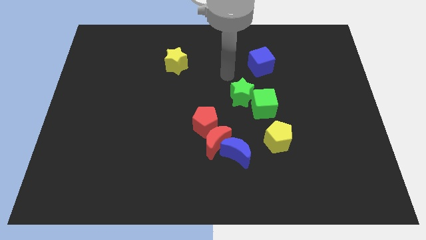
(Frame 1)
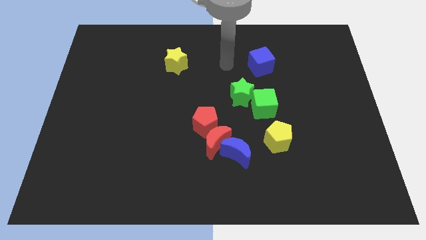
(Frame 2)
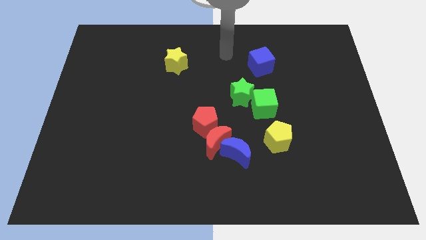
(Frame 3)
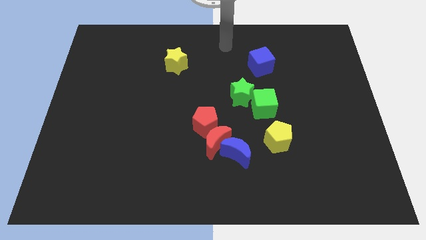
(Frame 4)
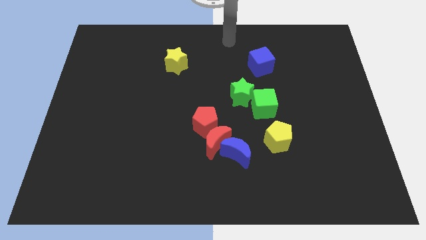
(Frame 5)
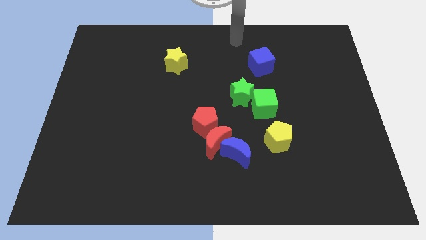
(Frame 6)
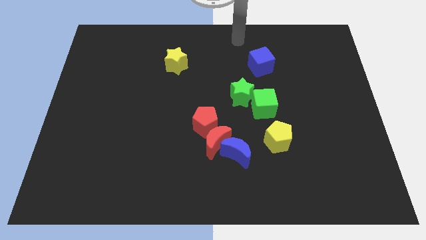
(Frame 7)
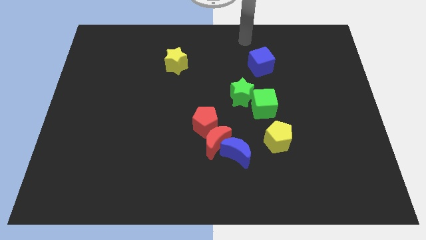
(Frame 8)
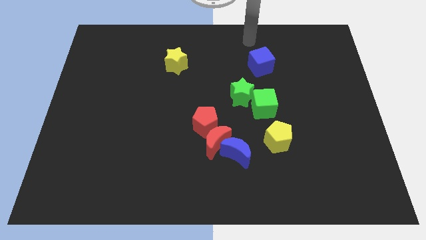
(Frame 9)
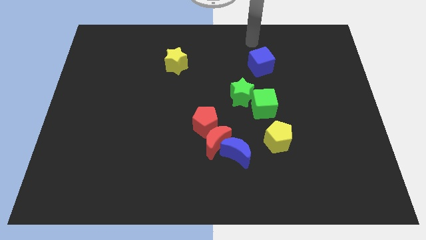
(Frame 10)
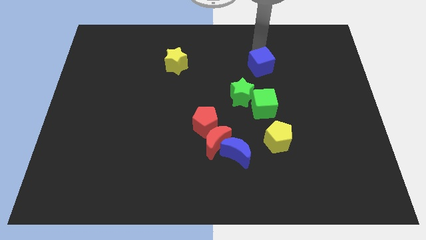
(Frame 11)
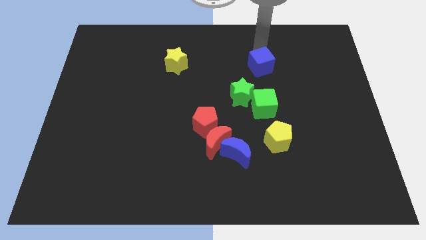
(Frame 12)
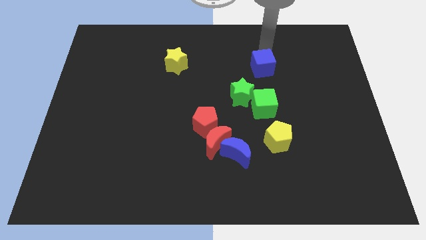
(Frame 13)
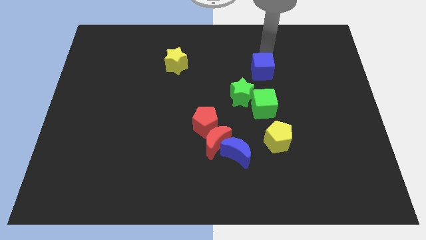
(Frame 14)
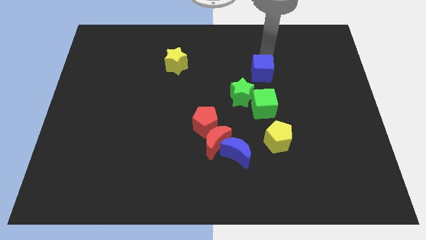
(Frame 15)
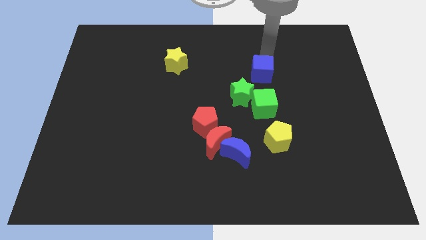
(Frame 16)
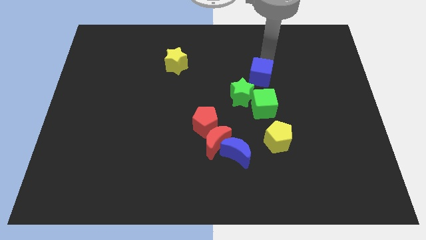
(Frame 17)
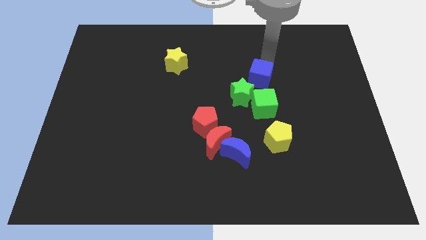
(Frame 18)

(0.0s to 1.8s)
move the blue cube towards the green star

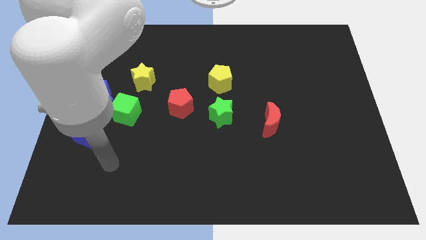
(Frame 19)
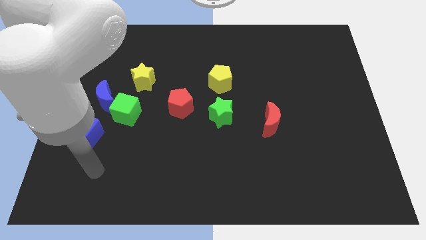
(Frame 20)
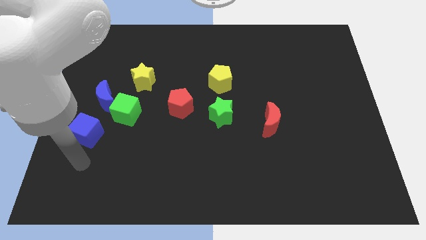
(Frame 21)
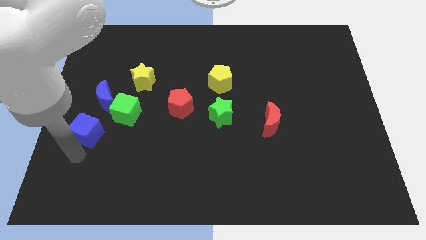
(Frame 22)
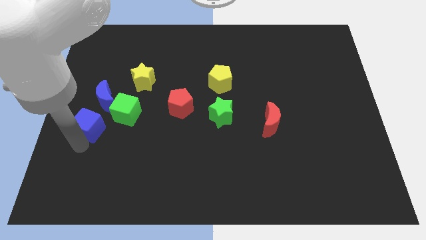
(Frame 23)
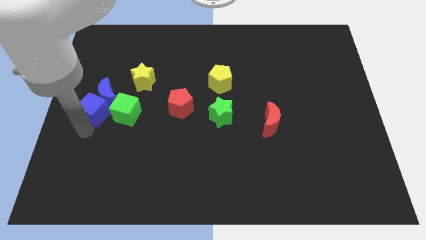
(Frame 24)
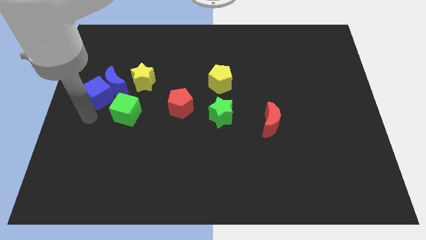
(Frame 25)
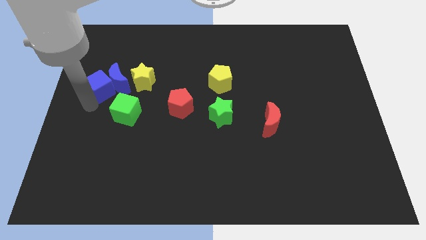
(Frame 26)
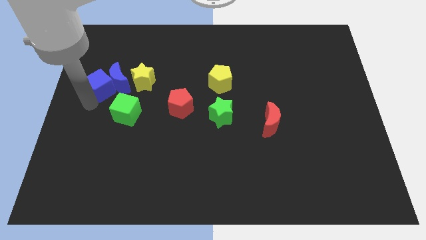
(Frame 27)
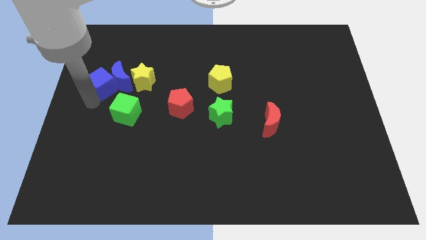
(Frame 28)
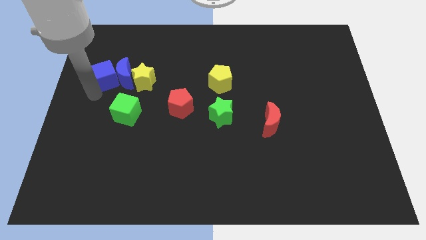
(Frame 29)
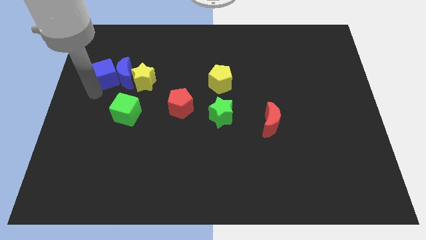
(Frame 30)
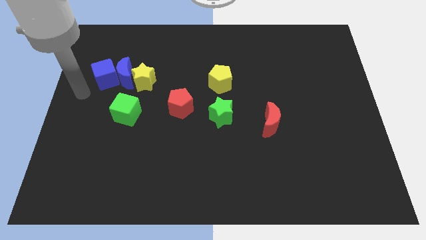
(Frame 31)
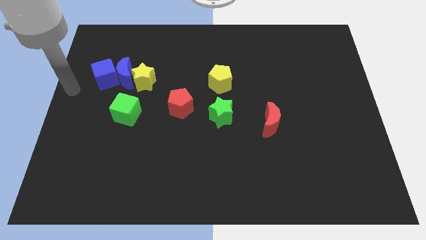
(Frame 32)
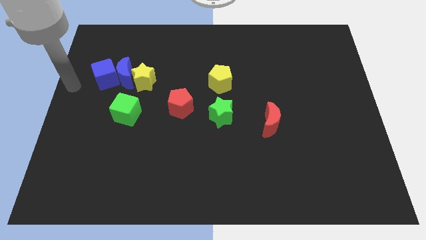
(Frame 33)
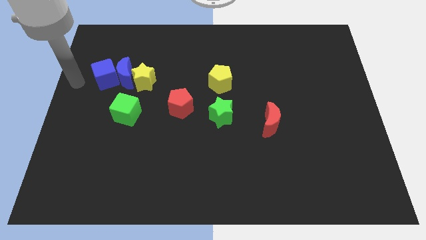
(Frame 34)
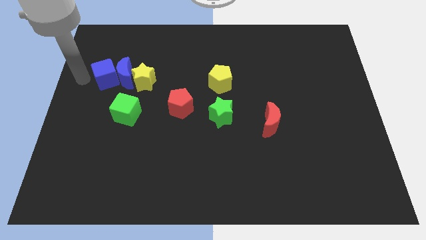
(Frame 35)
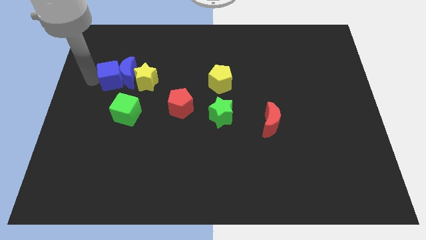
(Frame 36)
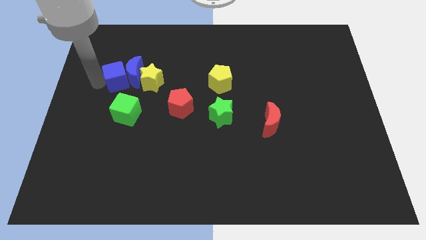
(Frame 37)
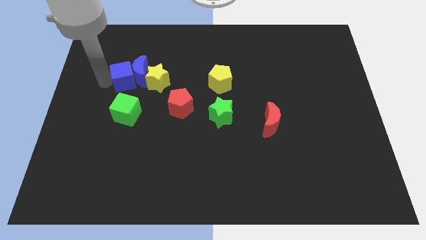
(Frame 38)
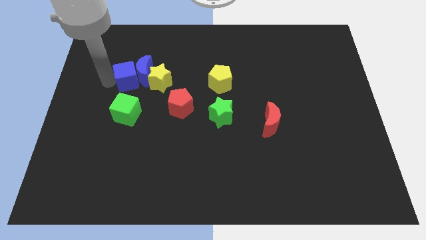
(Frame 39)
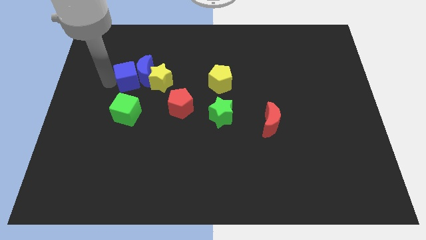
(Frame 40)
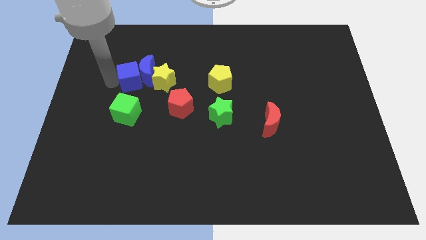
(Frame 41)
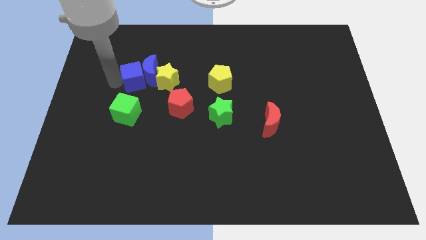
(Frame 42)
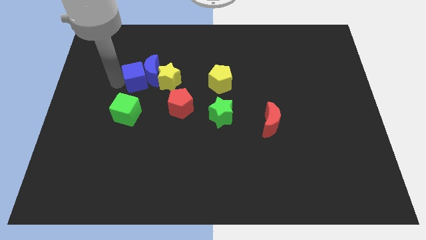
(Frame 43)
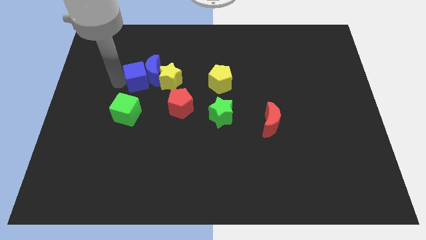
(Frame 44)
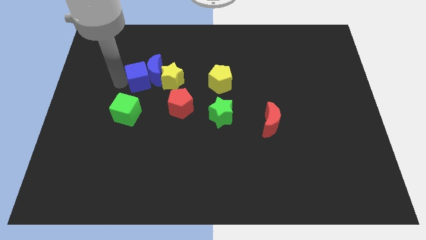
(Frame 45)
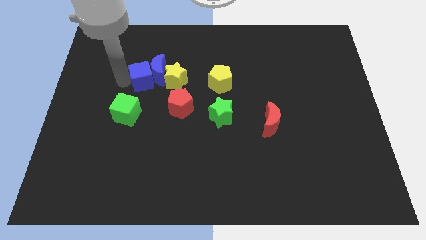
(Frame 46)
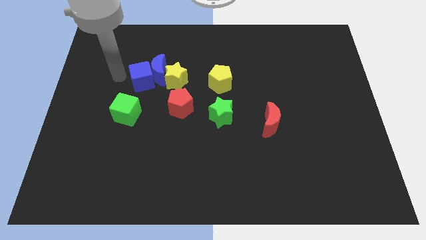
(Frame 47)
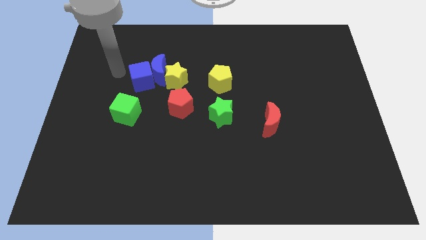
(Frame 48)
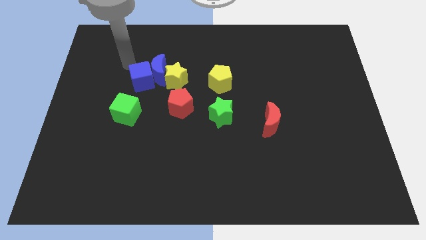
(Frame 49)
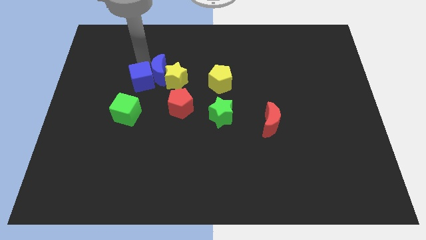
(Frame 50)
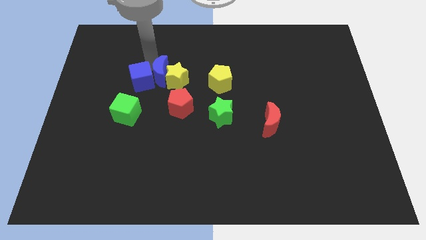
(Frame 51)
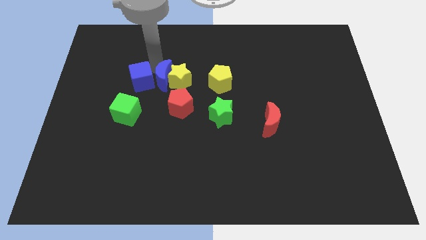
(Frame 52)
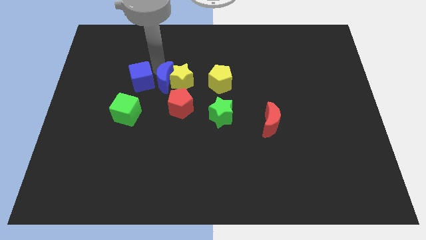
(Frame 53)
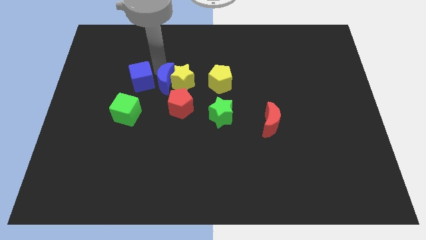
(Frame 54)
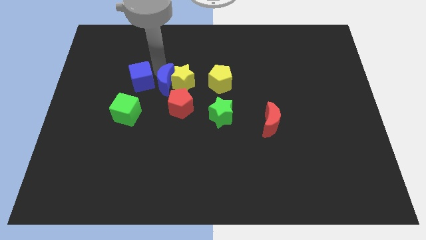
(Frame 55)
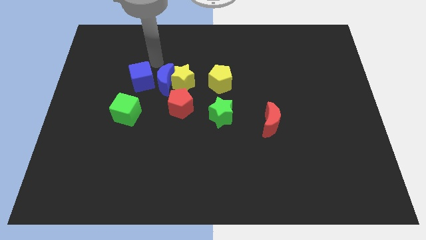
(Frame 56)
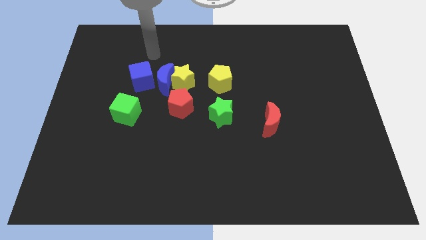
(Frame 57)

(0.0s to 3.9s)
make a horizontal line with blue cubeblue crescent and yellow star above the red pentagon

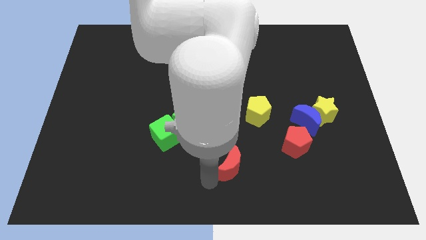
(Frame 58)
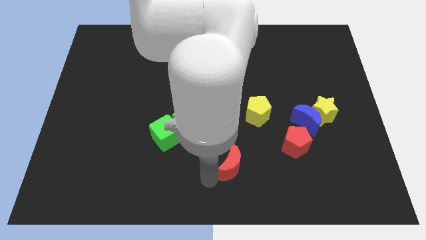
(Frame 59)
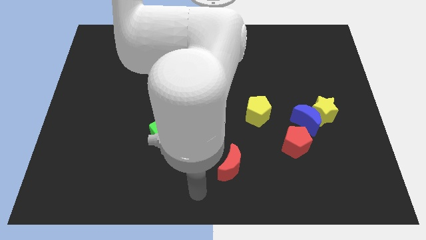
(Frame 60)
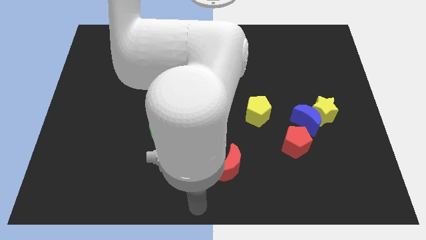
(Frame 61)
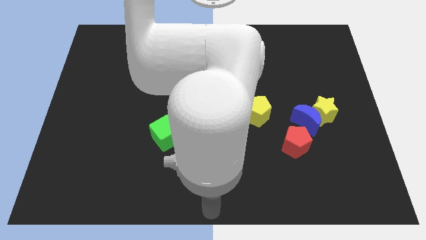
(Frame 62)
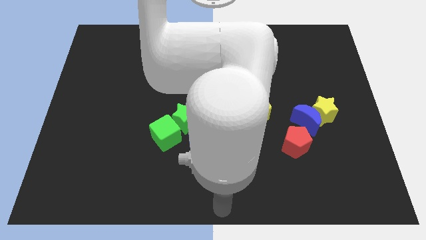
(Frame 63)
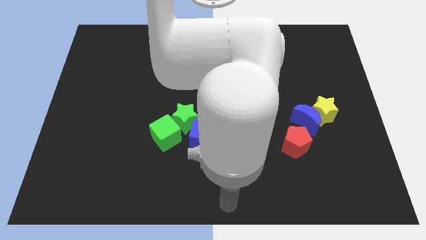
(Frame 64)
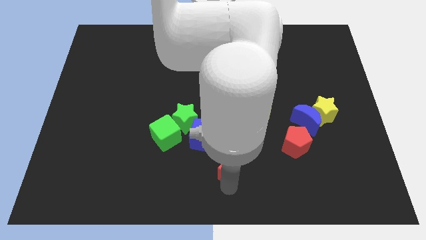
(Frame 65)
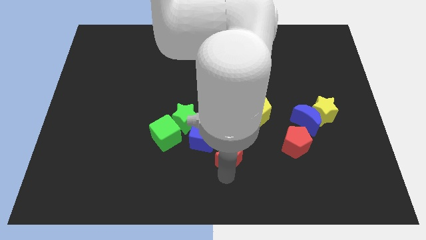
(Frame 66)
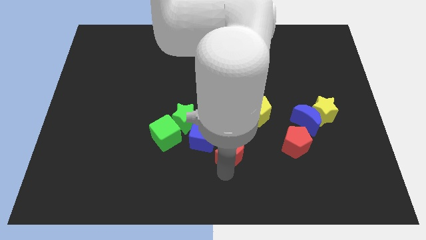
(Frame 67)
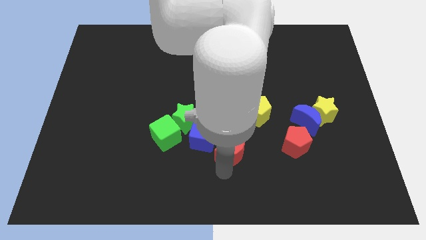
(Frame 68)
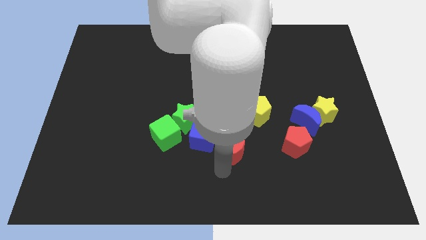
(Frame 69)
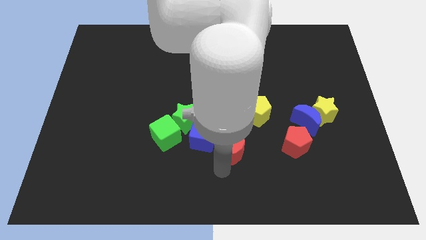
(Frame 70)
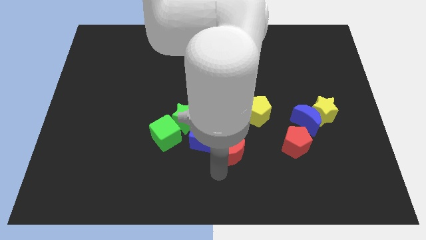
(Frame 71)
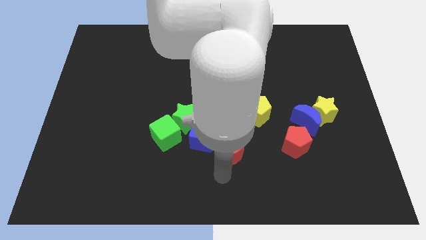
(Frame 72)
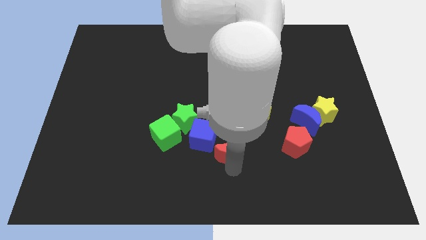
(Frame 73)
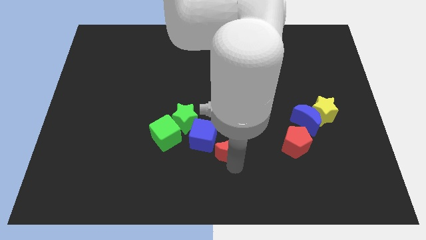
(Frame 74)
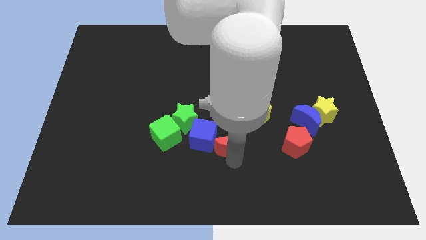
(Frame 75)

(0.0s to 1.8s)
push the red moon into the blue cube

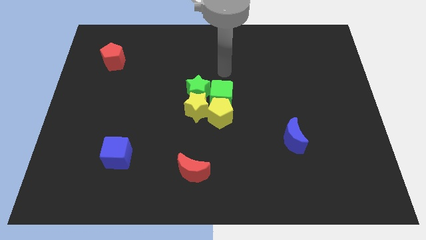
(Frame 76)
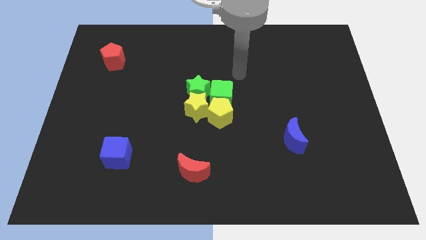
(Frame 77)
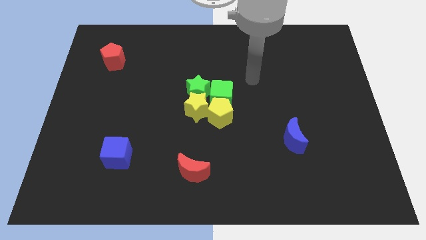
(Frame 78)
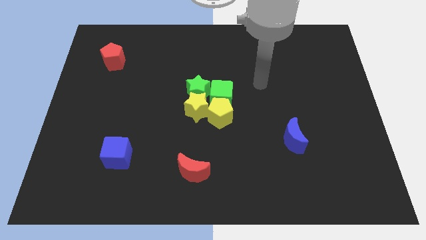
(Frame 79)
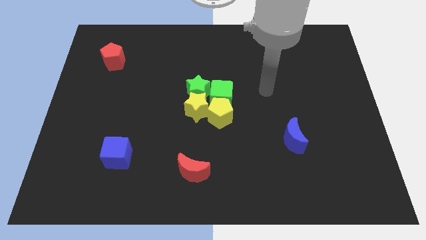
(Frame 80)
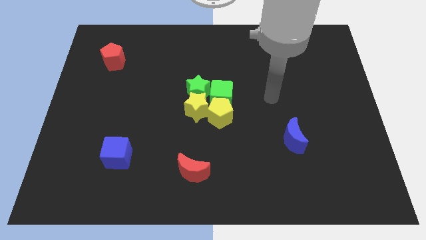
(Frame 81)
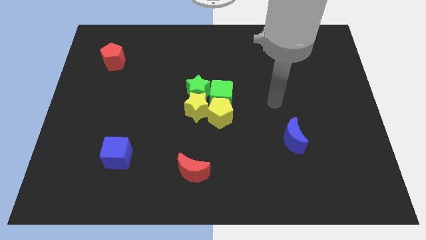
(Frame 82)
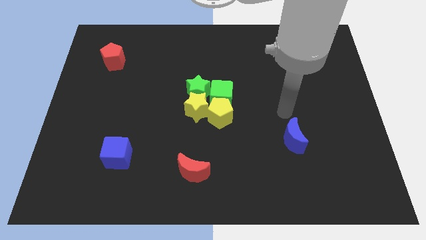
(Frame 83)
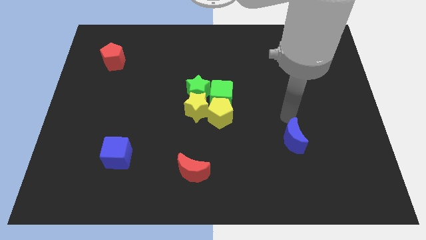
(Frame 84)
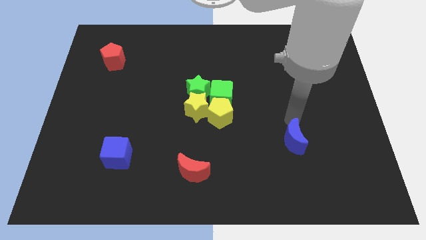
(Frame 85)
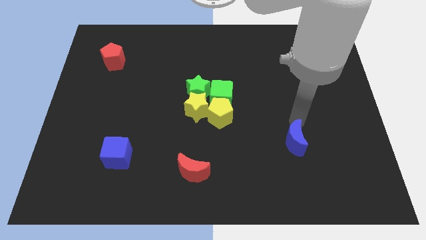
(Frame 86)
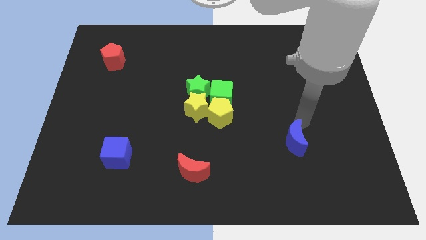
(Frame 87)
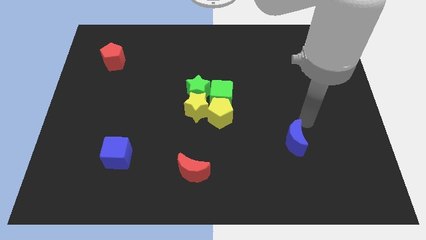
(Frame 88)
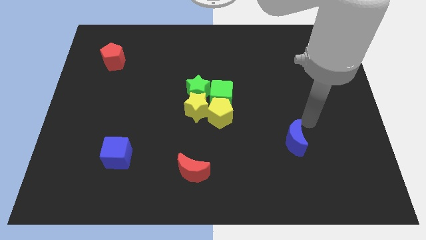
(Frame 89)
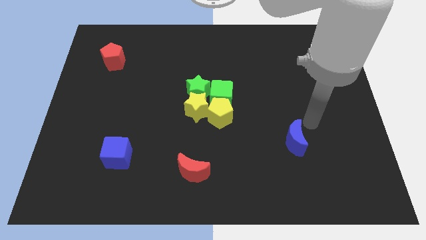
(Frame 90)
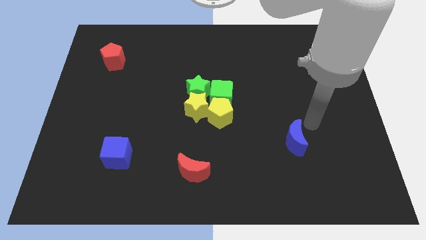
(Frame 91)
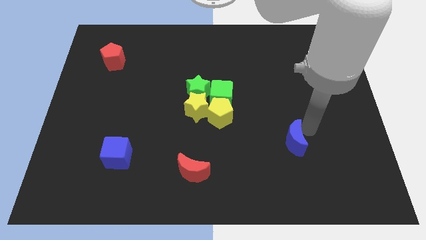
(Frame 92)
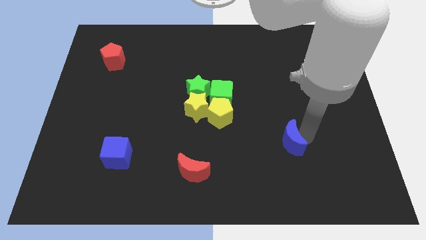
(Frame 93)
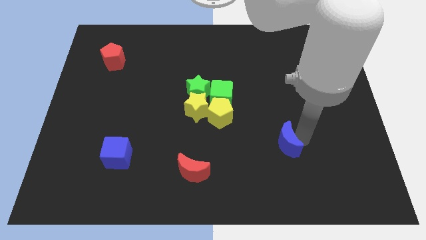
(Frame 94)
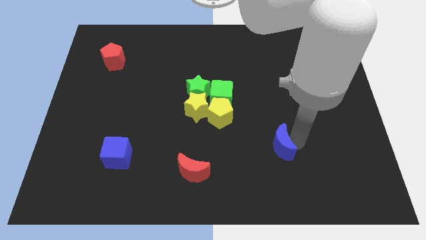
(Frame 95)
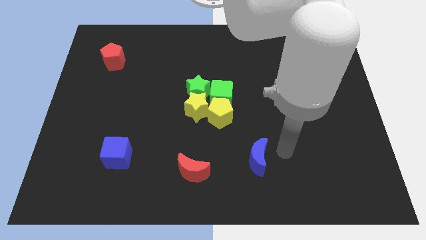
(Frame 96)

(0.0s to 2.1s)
move the blue moon towards the red moon
